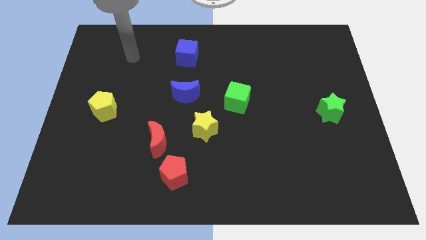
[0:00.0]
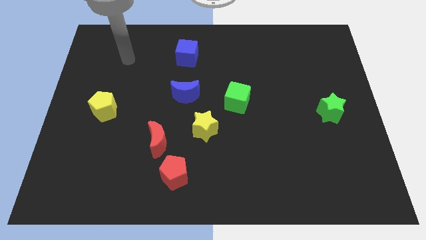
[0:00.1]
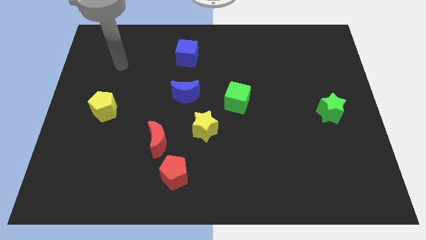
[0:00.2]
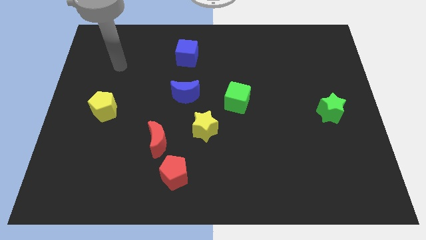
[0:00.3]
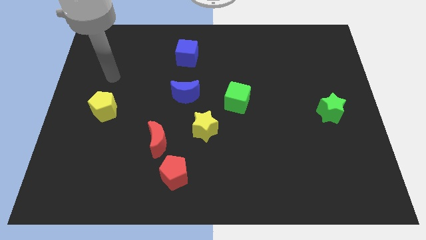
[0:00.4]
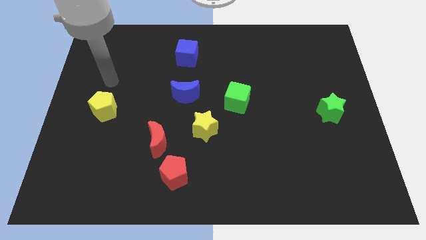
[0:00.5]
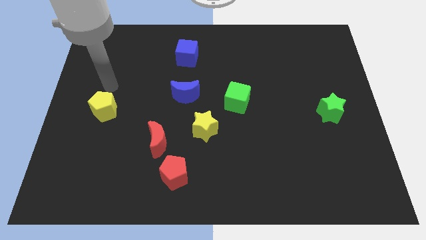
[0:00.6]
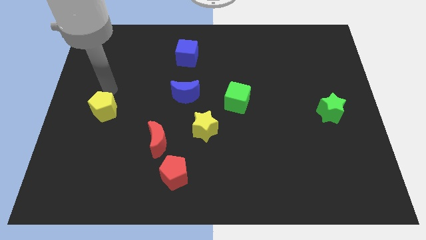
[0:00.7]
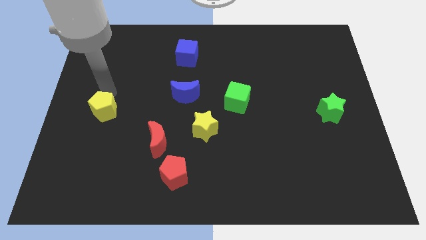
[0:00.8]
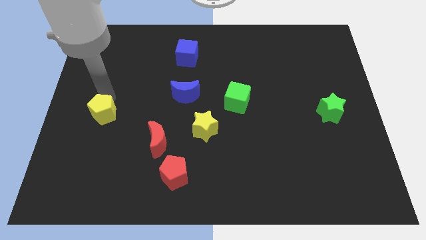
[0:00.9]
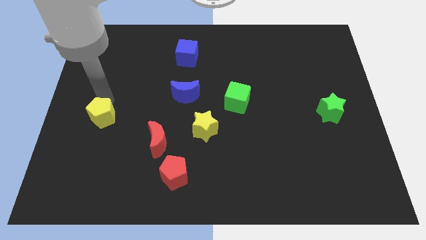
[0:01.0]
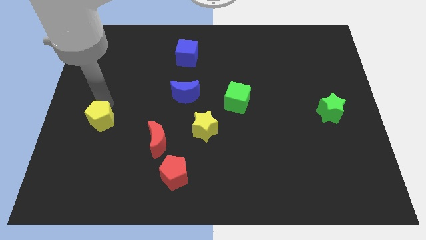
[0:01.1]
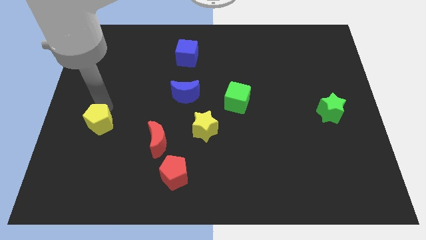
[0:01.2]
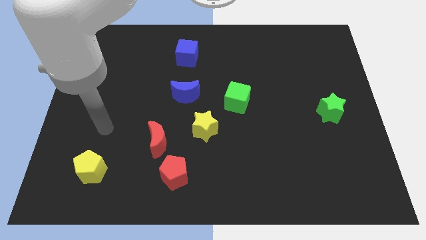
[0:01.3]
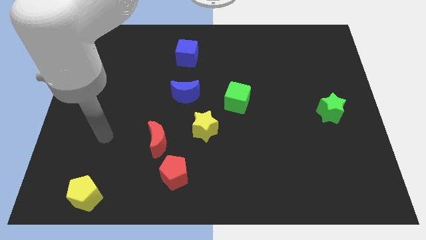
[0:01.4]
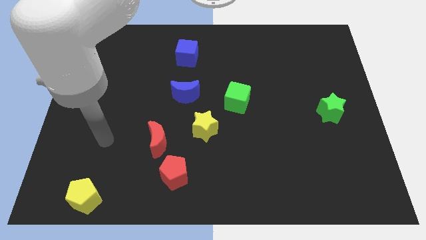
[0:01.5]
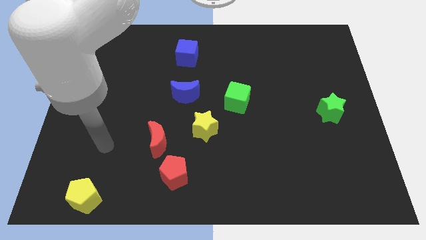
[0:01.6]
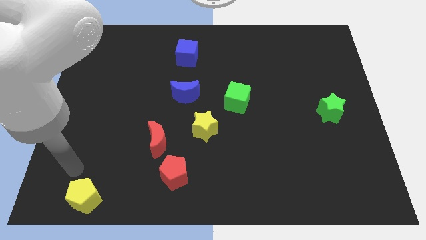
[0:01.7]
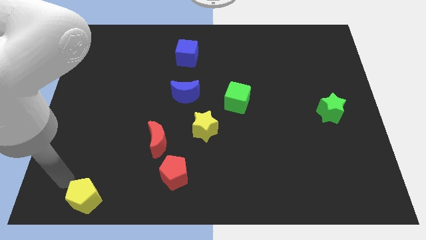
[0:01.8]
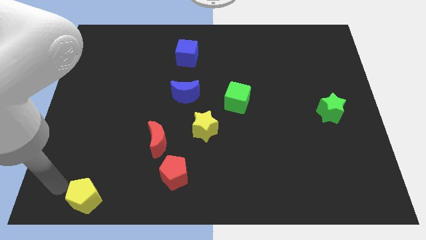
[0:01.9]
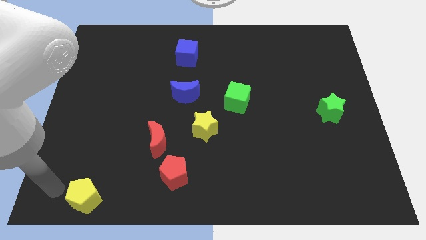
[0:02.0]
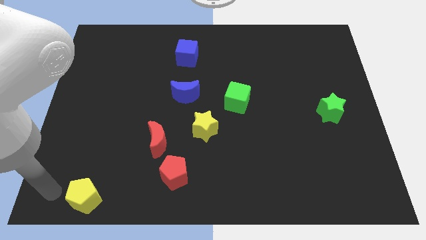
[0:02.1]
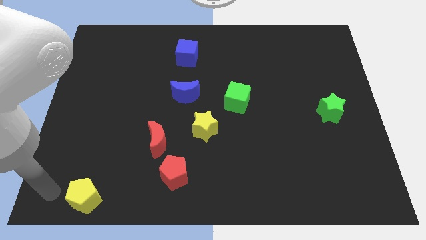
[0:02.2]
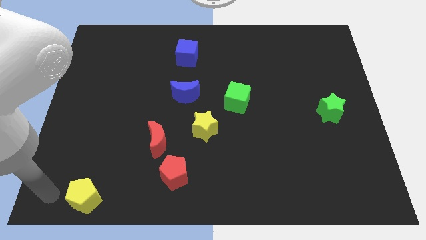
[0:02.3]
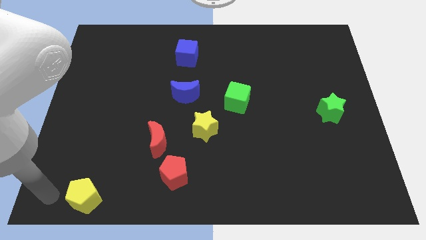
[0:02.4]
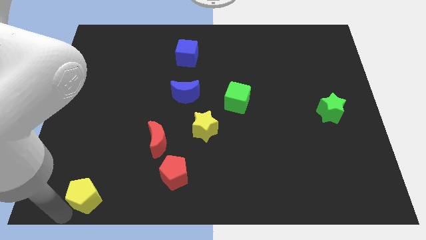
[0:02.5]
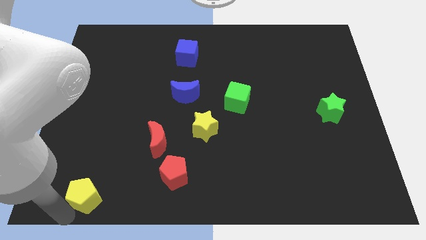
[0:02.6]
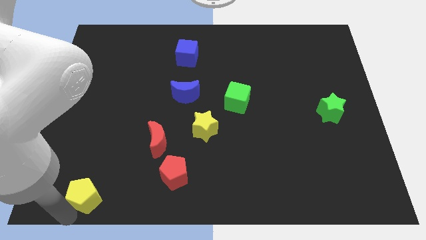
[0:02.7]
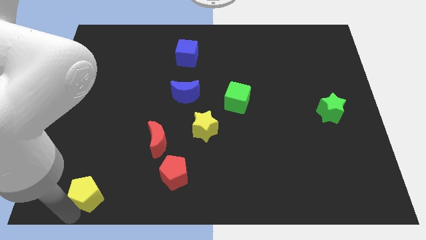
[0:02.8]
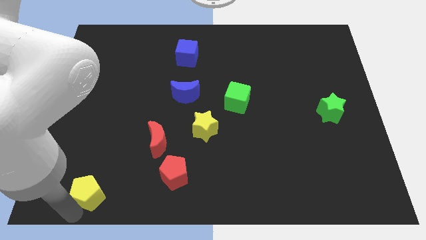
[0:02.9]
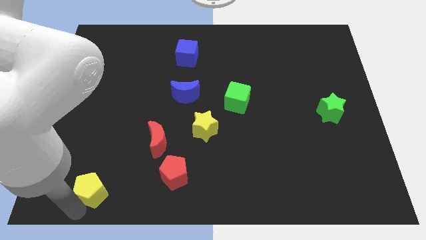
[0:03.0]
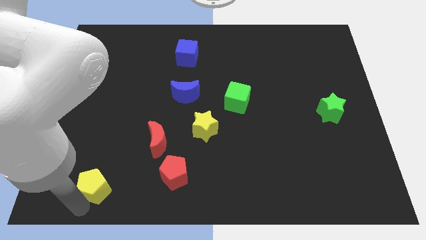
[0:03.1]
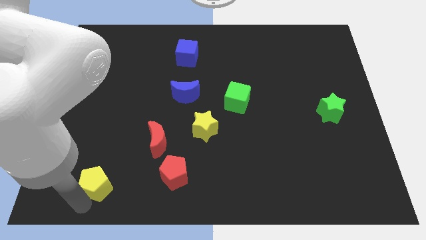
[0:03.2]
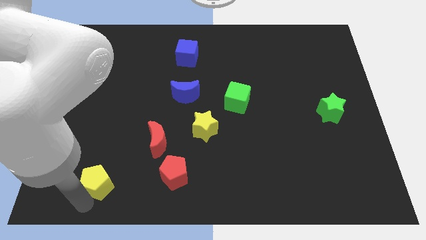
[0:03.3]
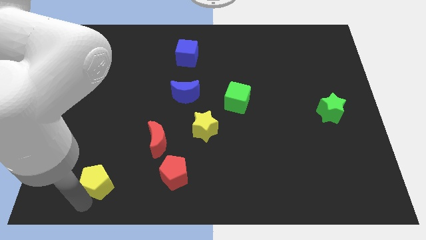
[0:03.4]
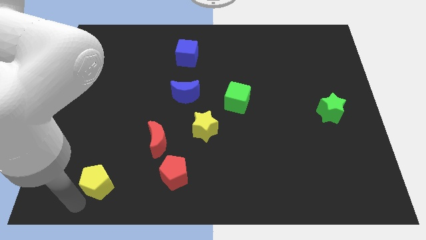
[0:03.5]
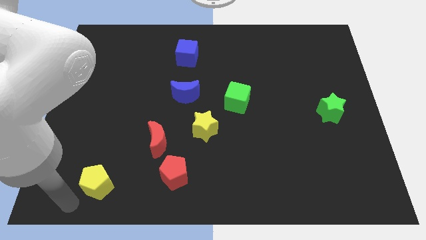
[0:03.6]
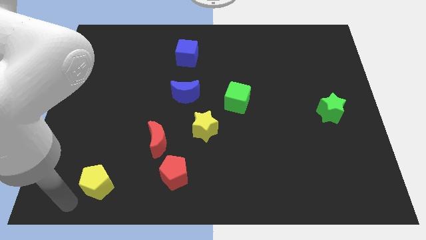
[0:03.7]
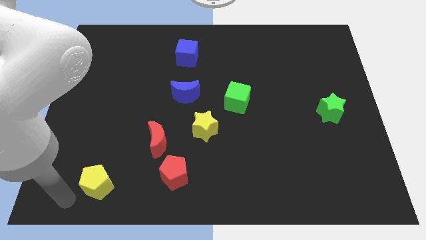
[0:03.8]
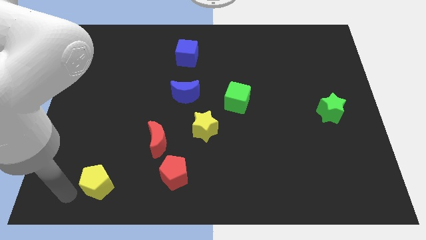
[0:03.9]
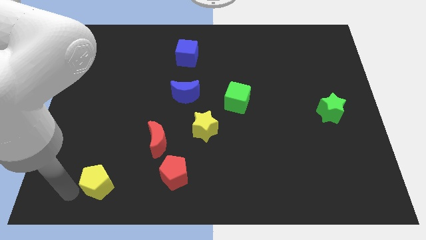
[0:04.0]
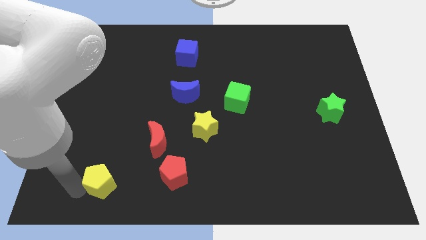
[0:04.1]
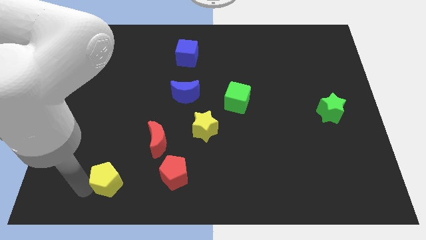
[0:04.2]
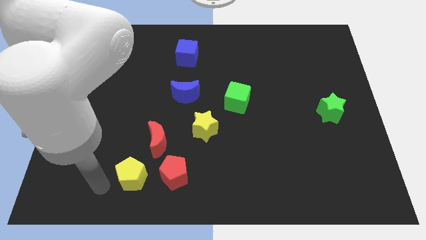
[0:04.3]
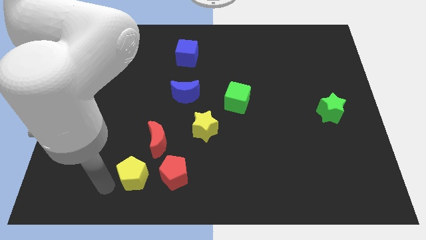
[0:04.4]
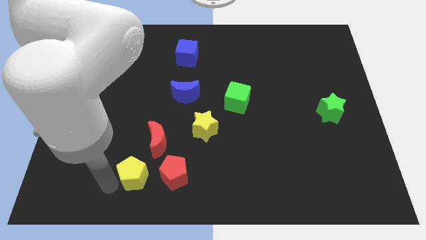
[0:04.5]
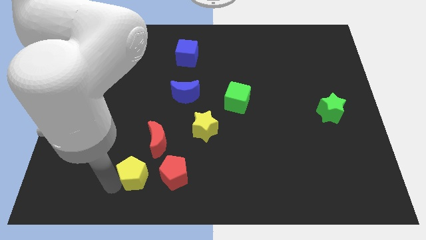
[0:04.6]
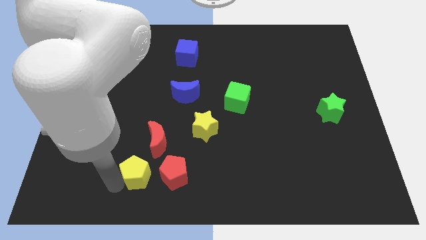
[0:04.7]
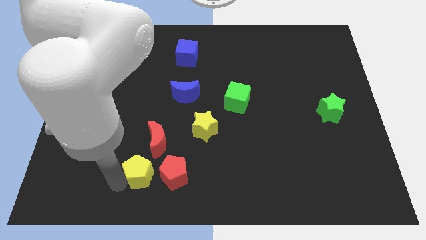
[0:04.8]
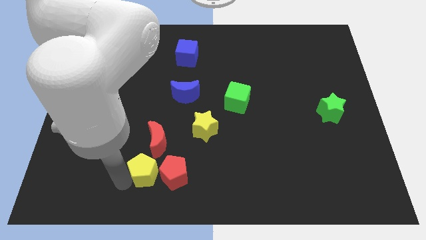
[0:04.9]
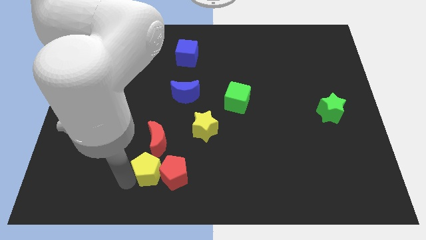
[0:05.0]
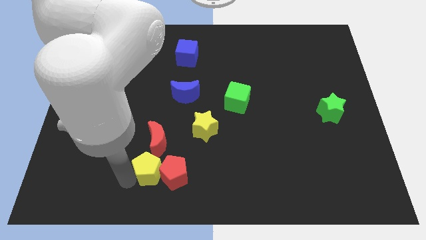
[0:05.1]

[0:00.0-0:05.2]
move the yellow pentagon towards the red pentagon

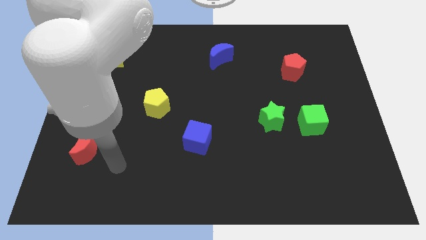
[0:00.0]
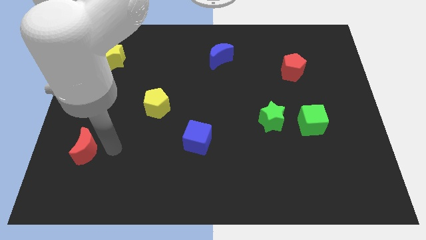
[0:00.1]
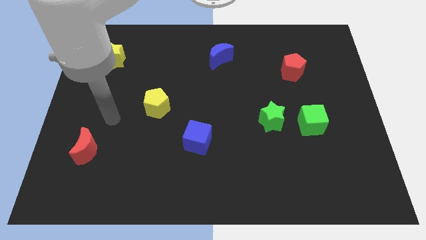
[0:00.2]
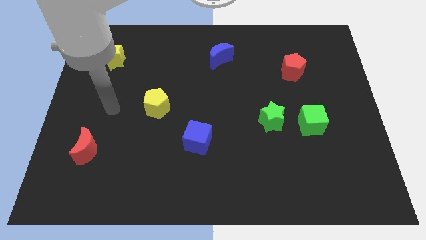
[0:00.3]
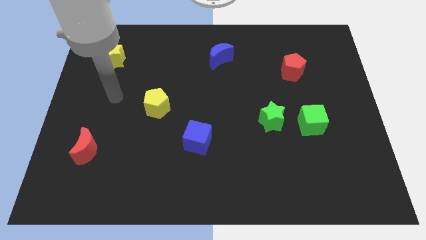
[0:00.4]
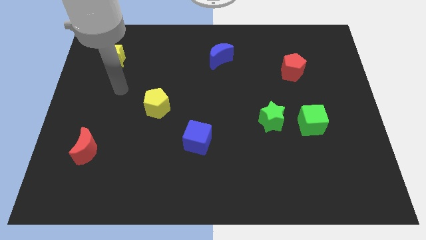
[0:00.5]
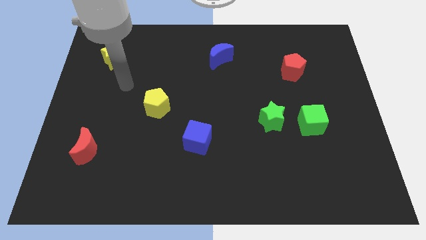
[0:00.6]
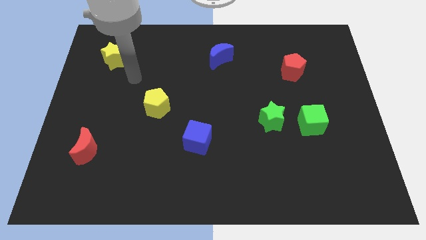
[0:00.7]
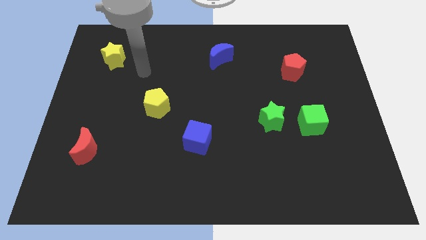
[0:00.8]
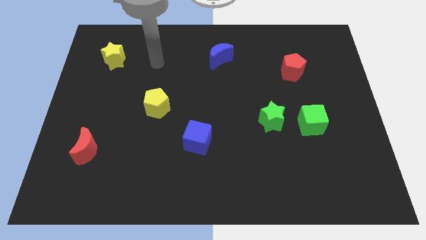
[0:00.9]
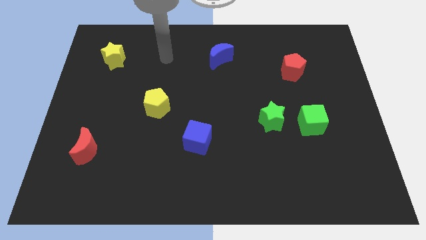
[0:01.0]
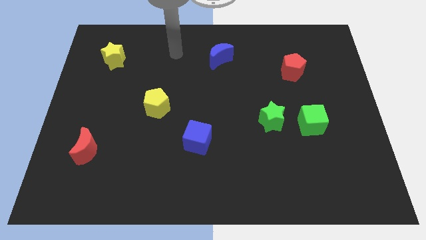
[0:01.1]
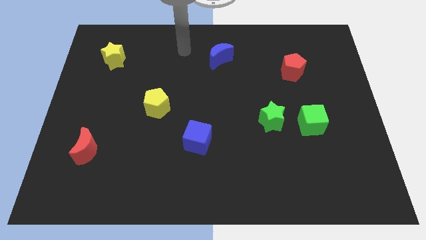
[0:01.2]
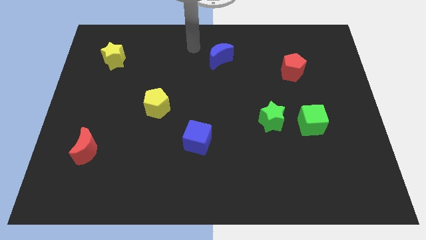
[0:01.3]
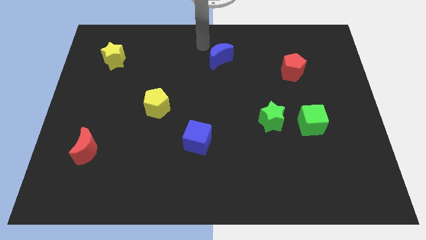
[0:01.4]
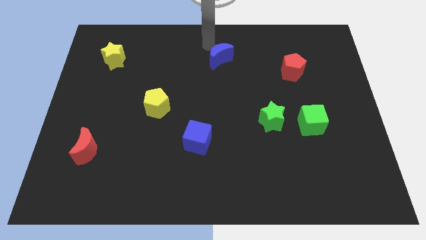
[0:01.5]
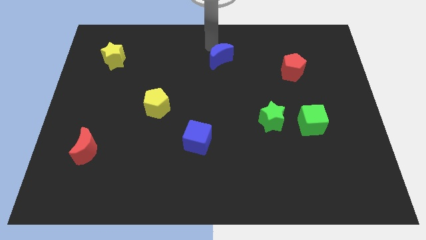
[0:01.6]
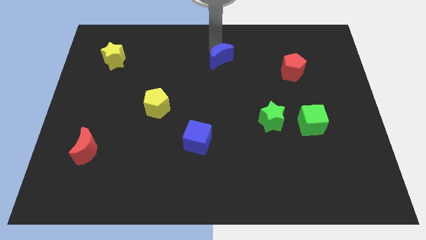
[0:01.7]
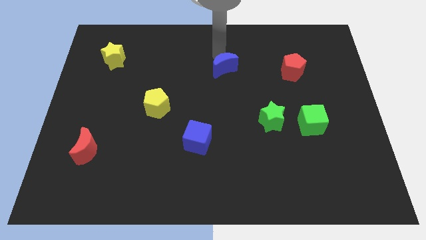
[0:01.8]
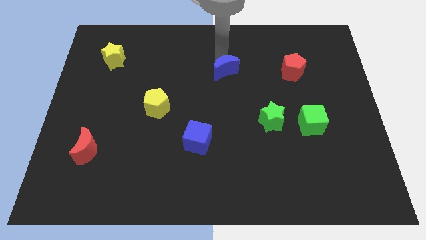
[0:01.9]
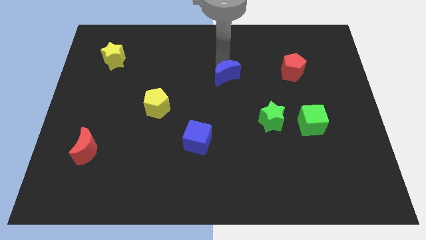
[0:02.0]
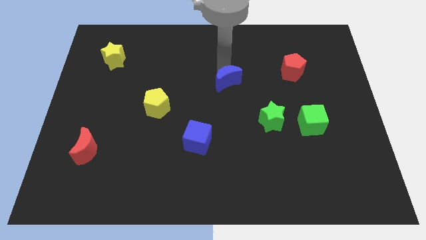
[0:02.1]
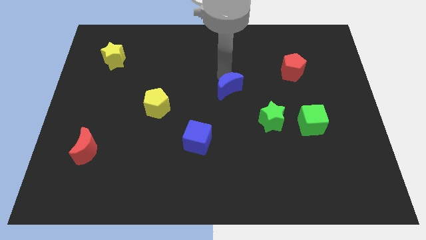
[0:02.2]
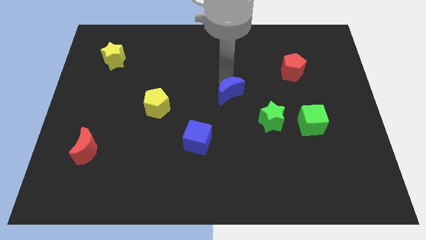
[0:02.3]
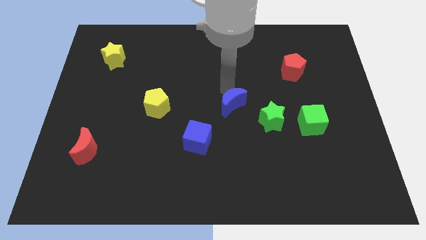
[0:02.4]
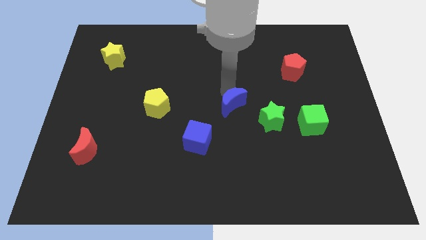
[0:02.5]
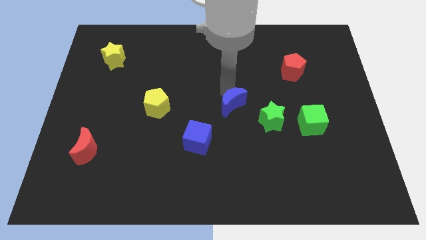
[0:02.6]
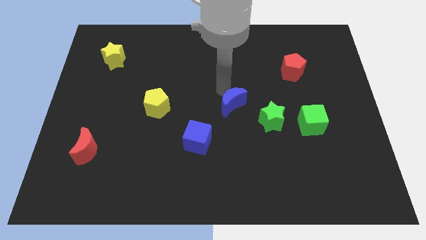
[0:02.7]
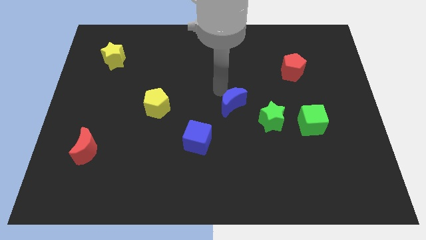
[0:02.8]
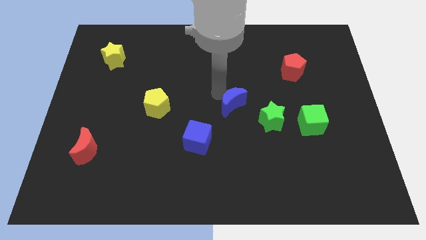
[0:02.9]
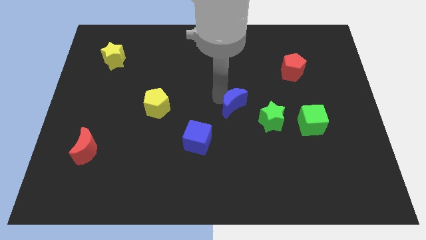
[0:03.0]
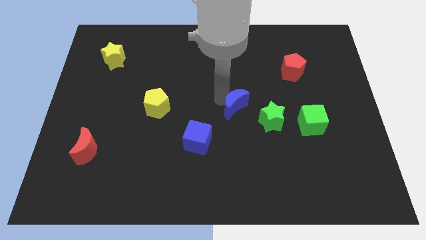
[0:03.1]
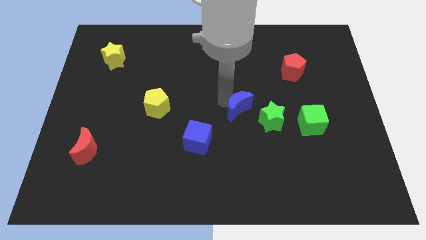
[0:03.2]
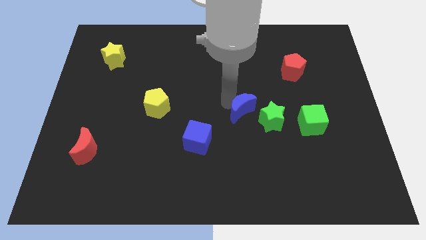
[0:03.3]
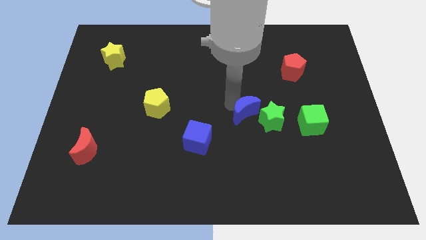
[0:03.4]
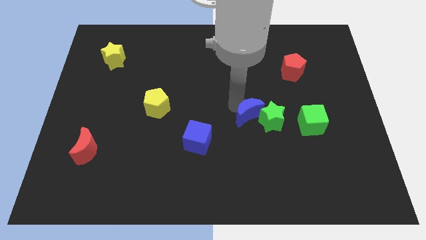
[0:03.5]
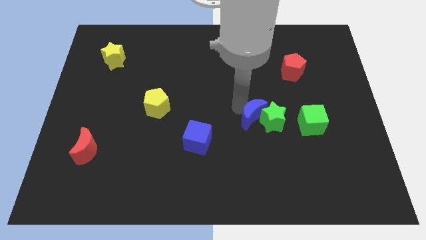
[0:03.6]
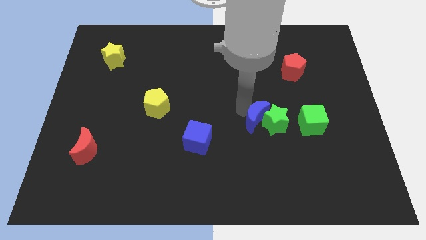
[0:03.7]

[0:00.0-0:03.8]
put the blue moon towards the green star
